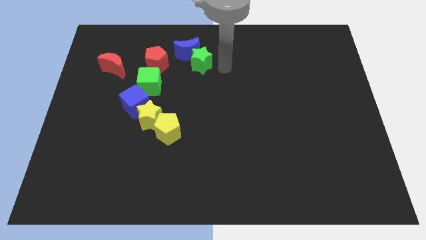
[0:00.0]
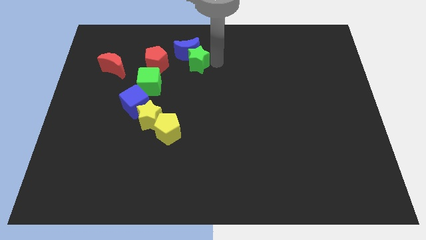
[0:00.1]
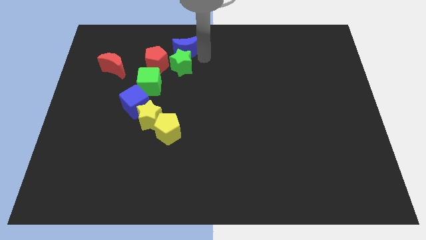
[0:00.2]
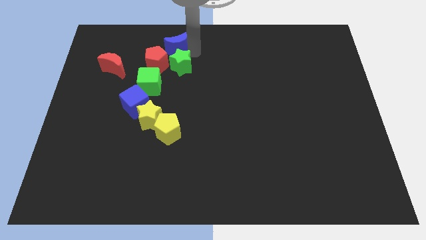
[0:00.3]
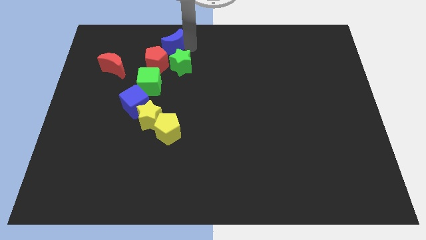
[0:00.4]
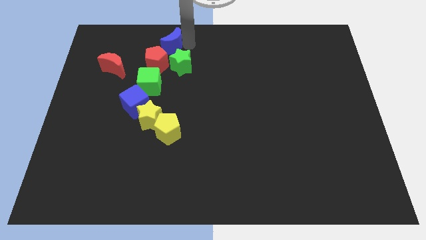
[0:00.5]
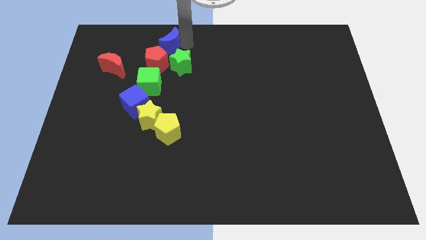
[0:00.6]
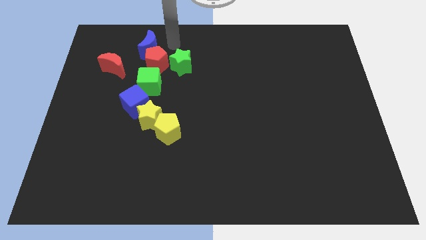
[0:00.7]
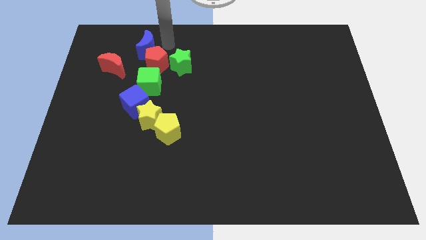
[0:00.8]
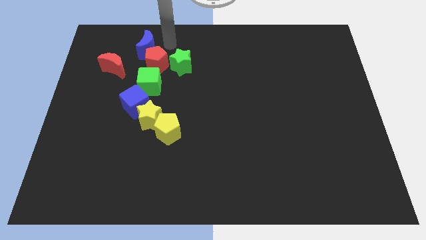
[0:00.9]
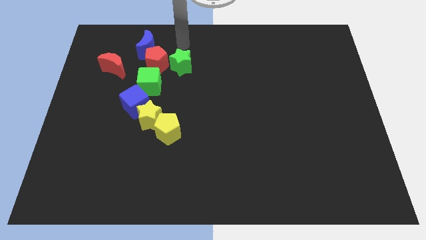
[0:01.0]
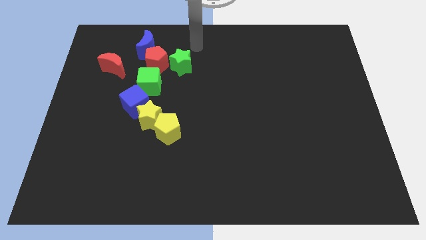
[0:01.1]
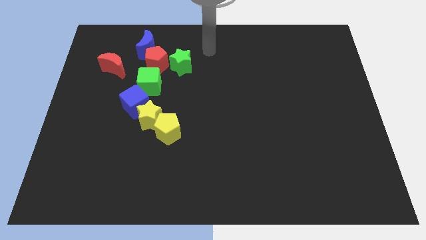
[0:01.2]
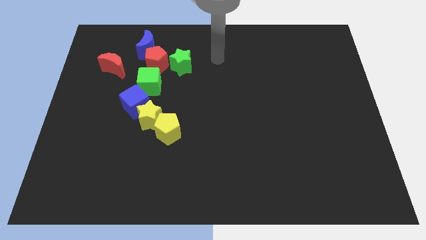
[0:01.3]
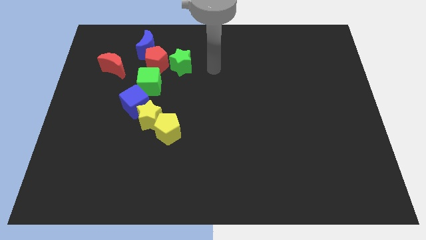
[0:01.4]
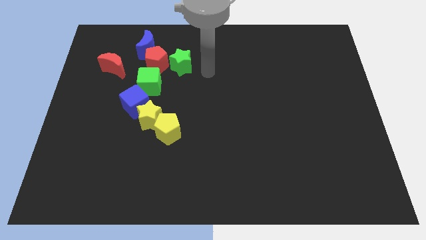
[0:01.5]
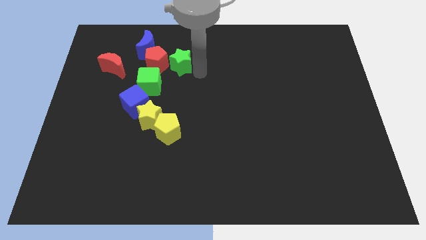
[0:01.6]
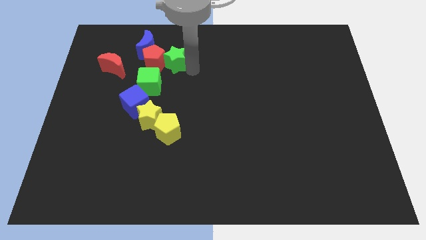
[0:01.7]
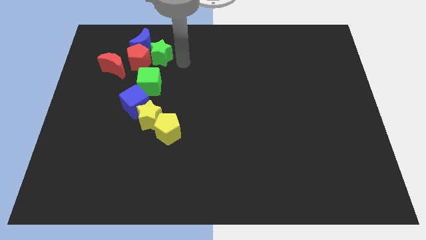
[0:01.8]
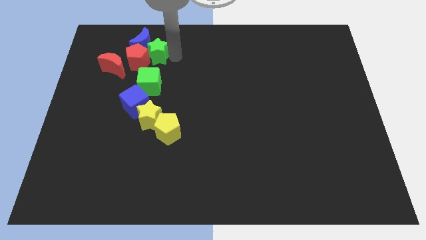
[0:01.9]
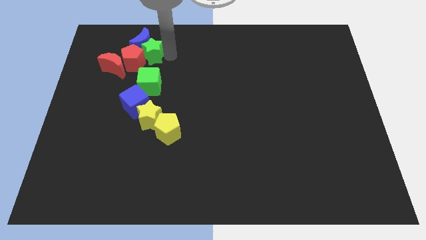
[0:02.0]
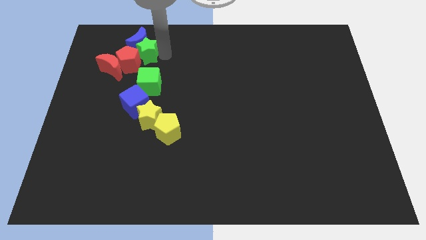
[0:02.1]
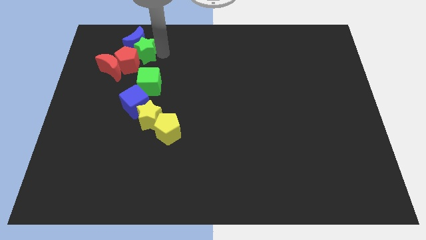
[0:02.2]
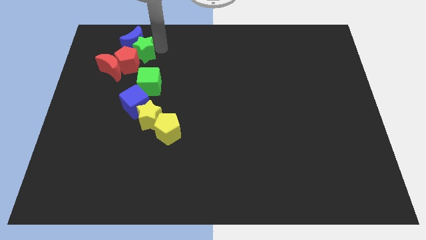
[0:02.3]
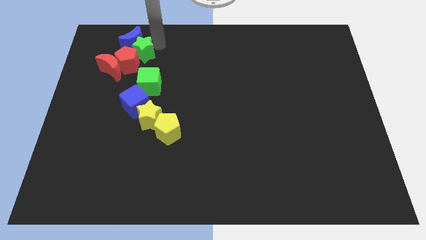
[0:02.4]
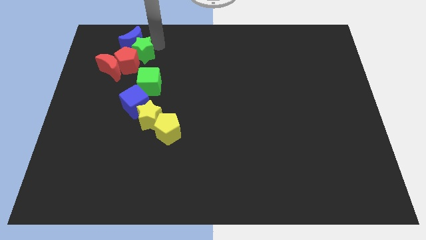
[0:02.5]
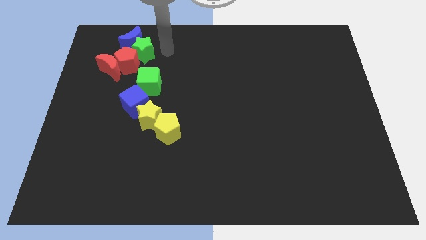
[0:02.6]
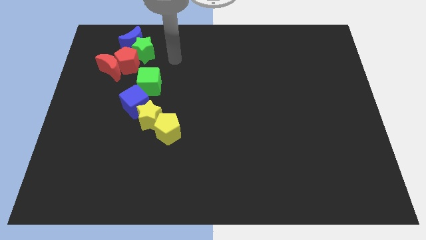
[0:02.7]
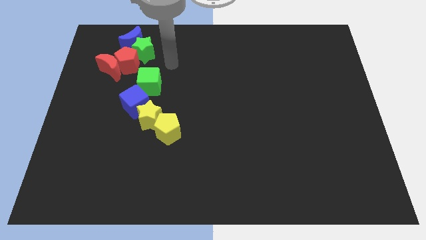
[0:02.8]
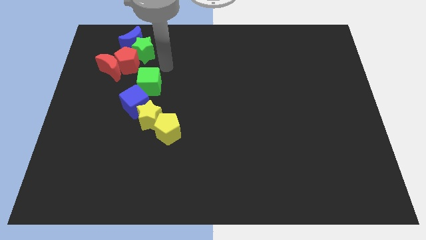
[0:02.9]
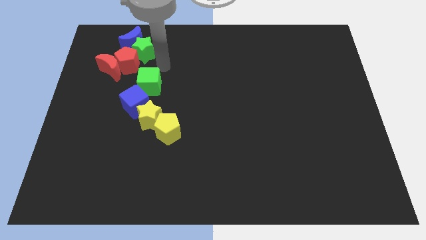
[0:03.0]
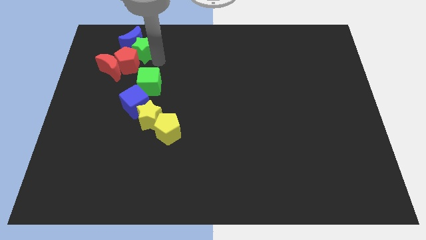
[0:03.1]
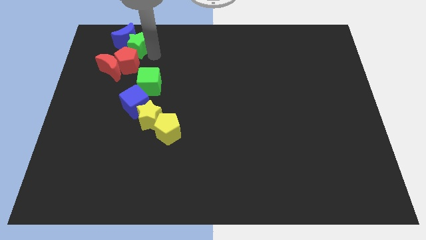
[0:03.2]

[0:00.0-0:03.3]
slide the blue moon and green star towards the top left side of the board

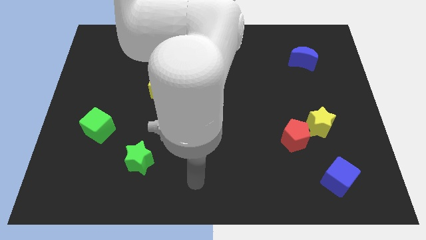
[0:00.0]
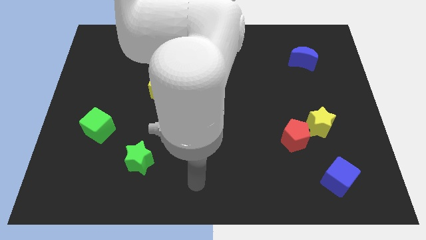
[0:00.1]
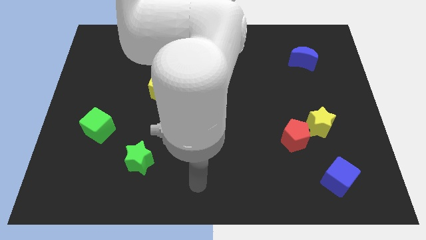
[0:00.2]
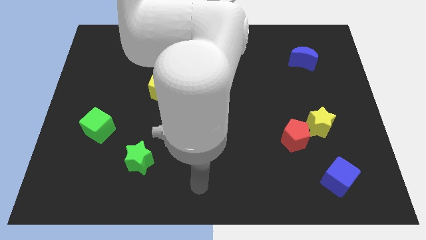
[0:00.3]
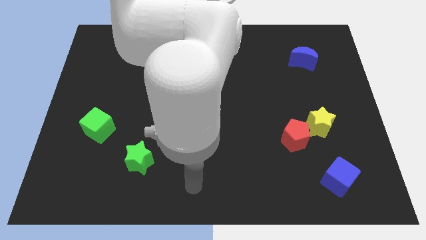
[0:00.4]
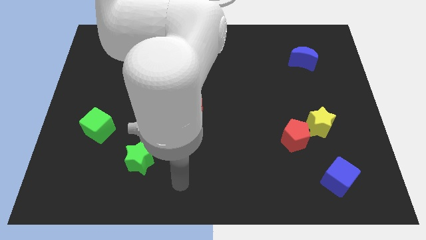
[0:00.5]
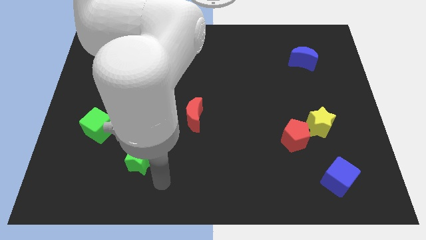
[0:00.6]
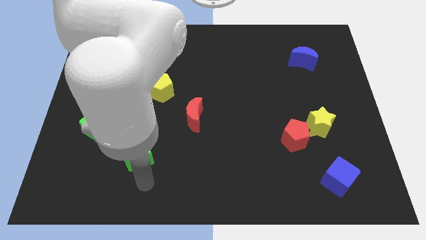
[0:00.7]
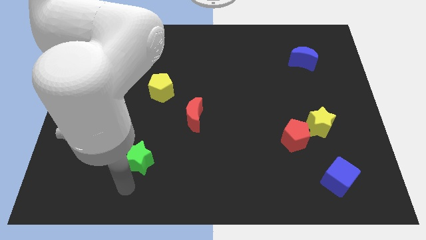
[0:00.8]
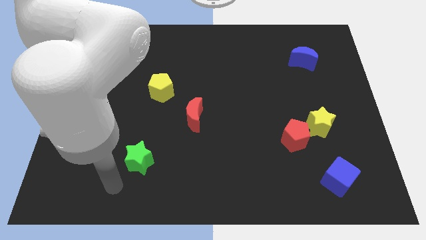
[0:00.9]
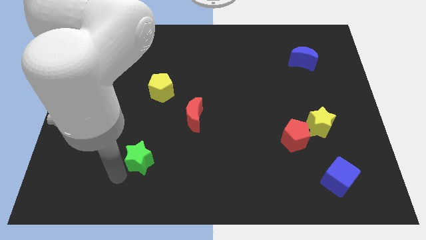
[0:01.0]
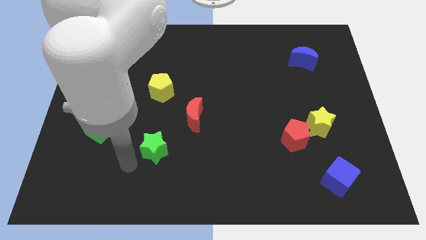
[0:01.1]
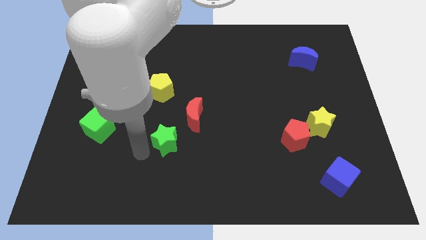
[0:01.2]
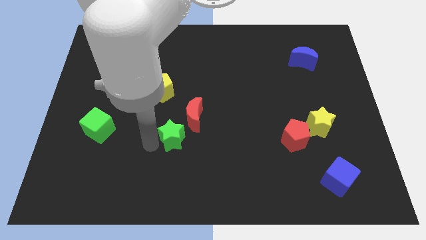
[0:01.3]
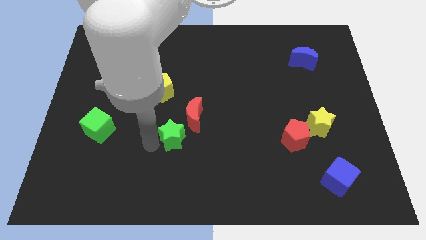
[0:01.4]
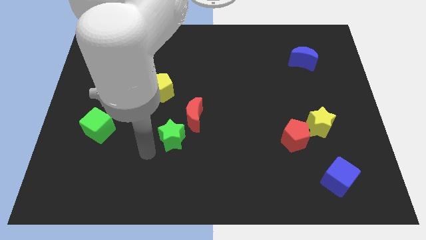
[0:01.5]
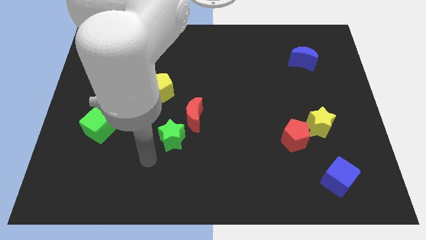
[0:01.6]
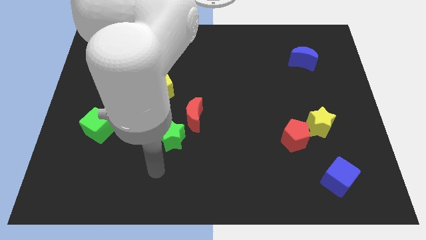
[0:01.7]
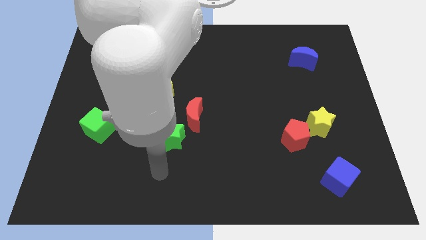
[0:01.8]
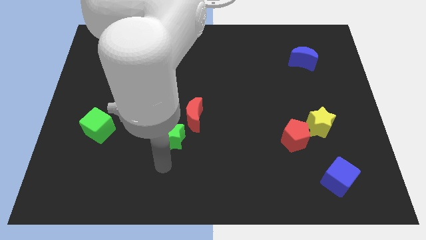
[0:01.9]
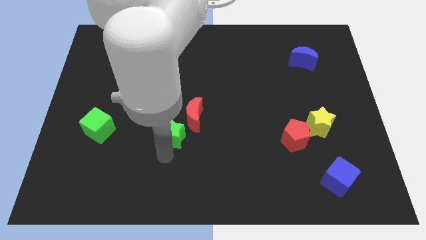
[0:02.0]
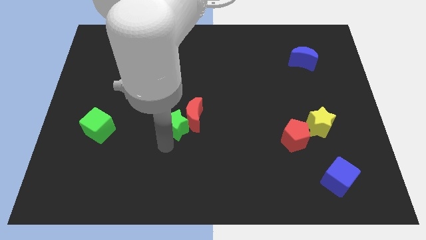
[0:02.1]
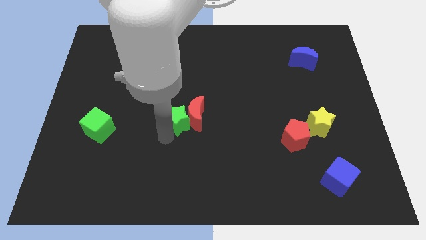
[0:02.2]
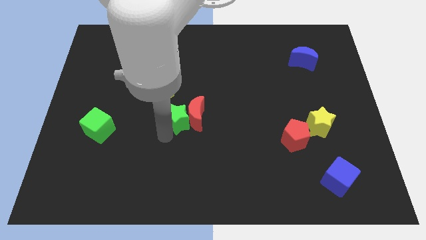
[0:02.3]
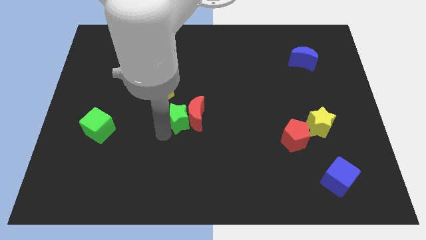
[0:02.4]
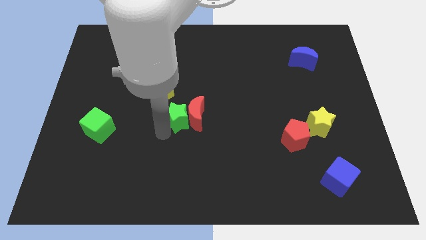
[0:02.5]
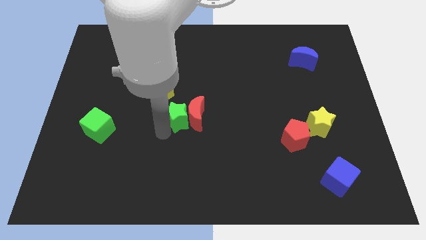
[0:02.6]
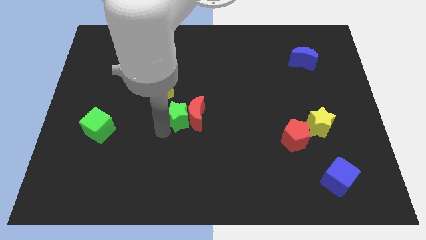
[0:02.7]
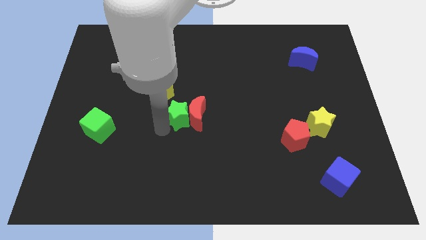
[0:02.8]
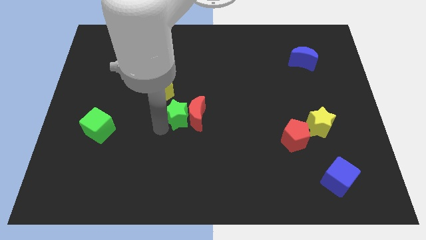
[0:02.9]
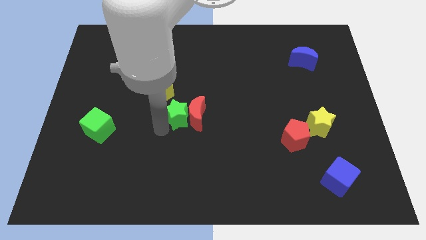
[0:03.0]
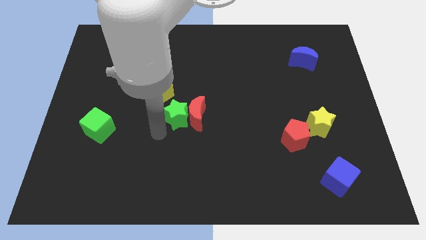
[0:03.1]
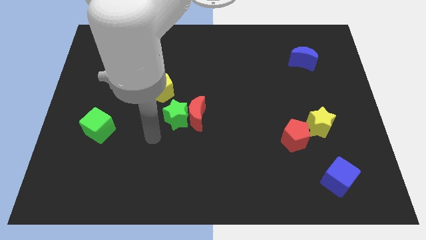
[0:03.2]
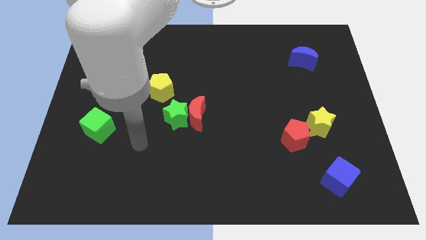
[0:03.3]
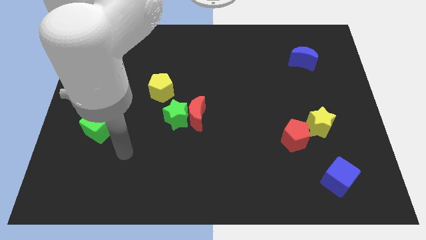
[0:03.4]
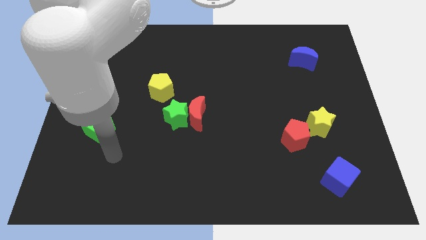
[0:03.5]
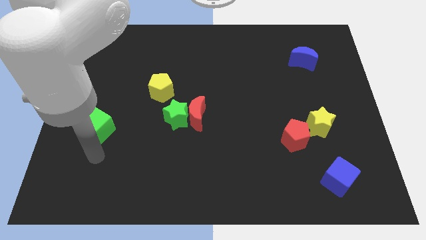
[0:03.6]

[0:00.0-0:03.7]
place the green star to the left of the red moon

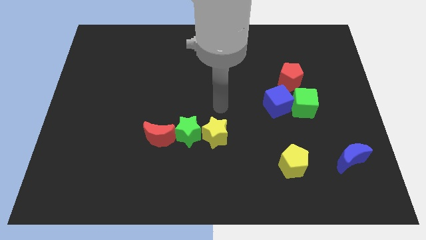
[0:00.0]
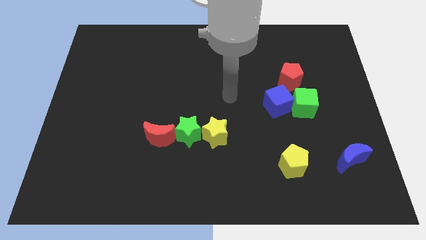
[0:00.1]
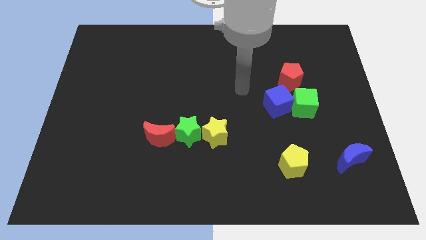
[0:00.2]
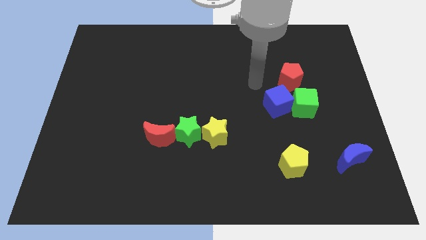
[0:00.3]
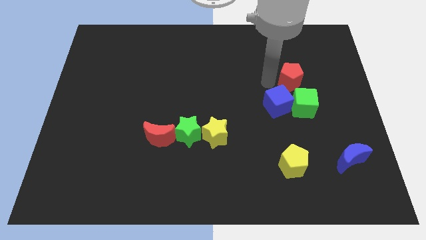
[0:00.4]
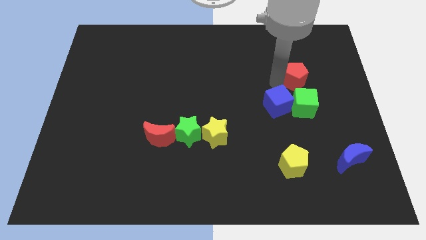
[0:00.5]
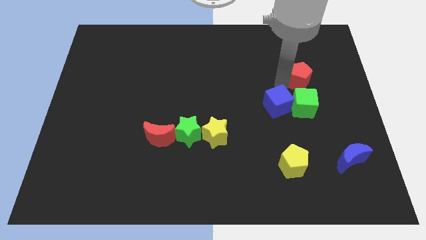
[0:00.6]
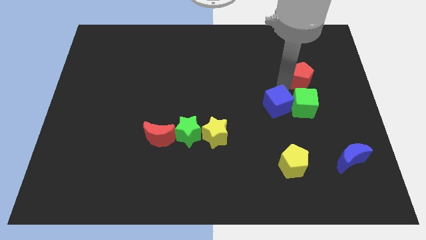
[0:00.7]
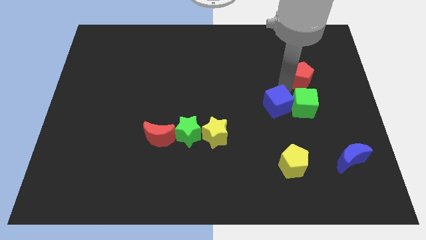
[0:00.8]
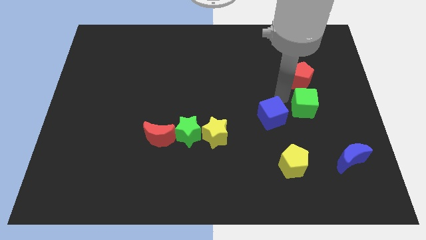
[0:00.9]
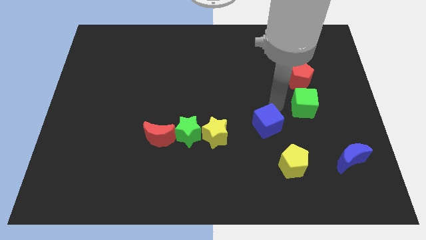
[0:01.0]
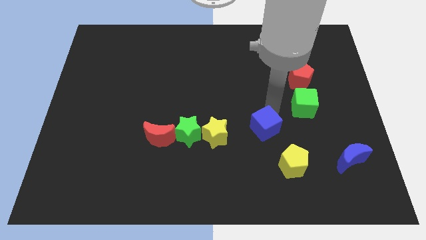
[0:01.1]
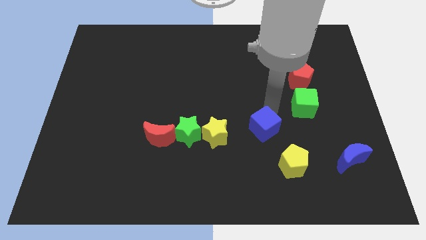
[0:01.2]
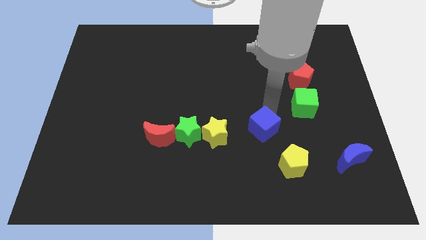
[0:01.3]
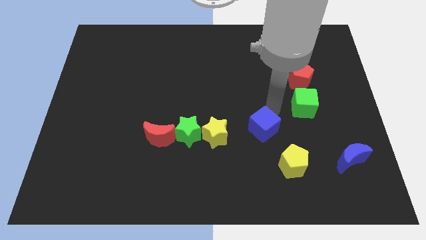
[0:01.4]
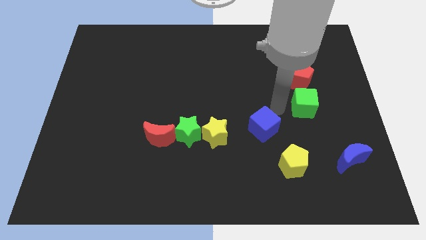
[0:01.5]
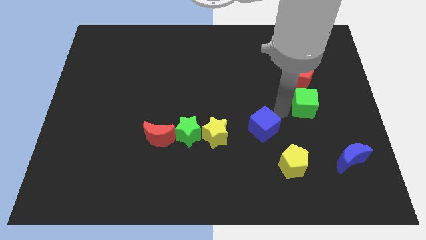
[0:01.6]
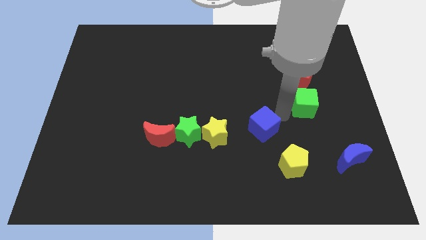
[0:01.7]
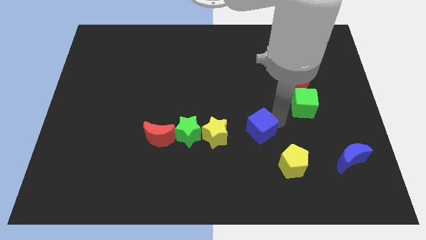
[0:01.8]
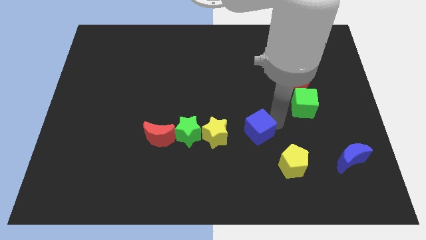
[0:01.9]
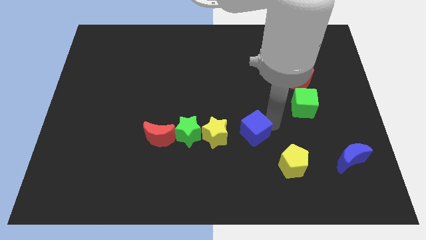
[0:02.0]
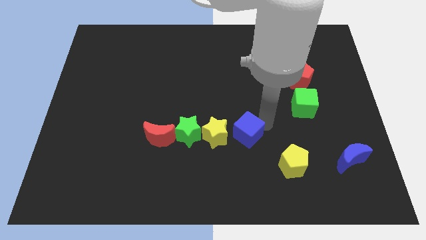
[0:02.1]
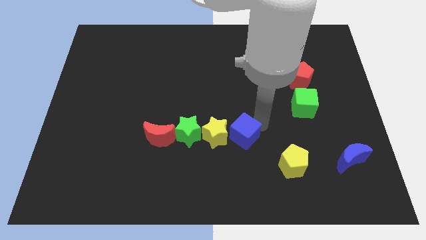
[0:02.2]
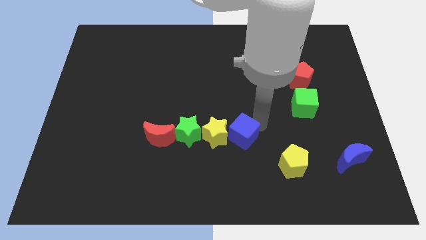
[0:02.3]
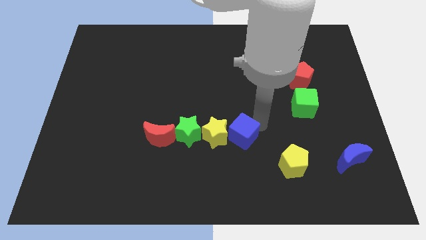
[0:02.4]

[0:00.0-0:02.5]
add the blue cube to the row at the center of the board
